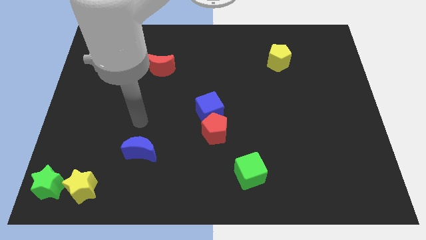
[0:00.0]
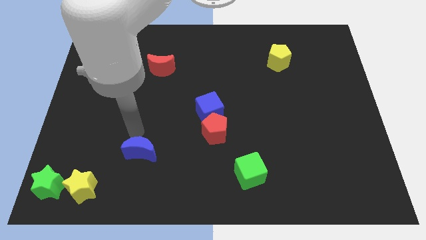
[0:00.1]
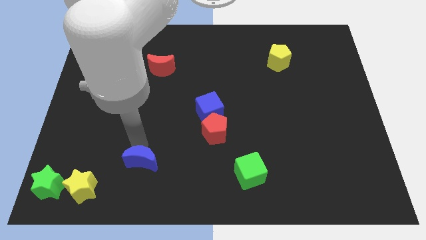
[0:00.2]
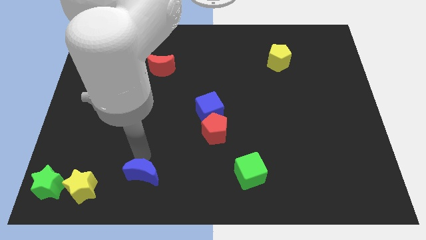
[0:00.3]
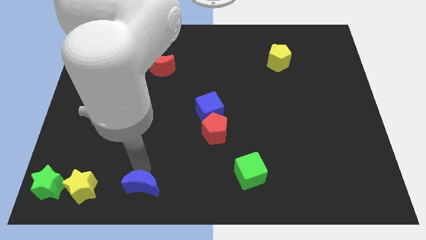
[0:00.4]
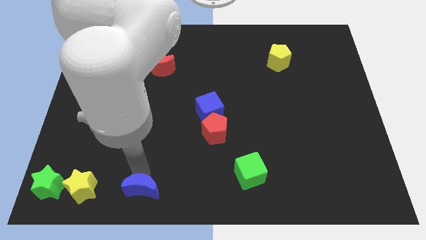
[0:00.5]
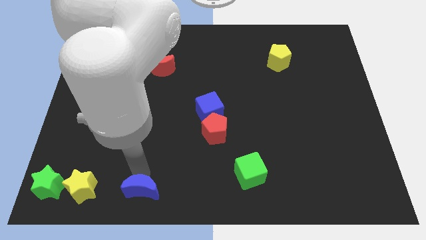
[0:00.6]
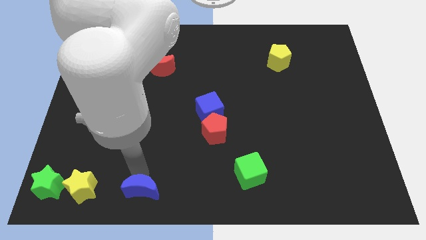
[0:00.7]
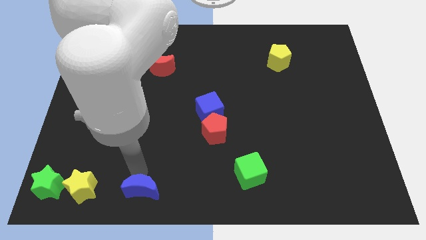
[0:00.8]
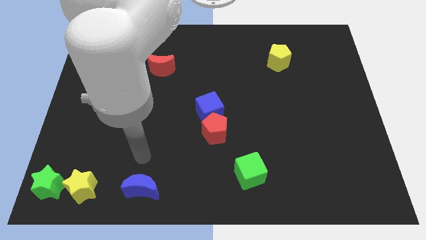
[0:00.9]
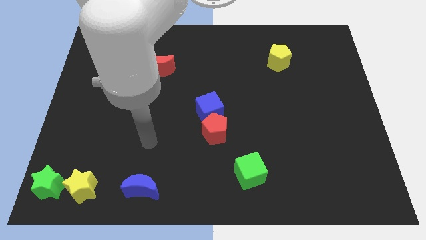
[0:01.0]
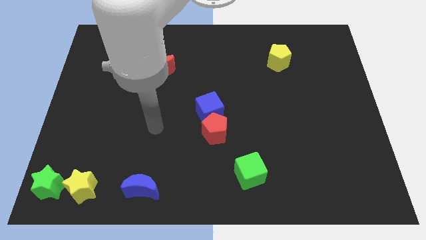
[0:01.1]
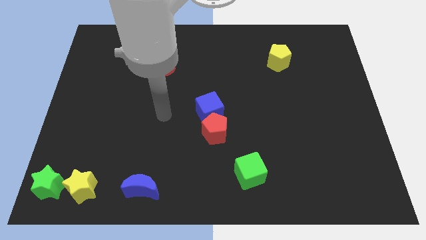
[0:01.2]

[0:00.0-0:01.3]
place the blue moon to the right of the yellow star

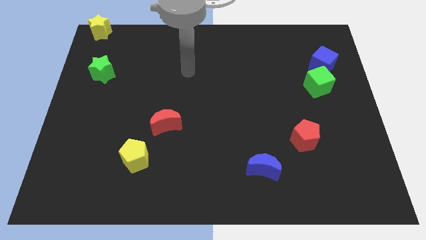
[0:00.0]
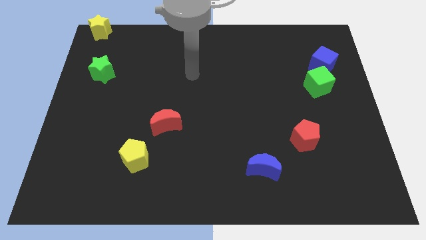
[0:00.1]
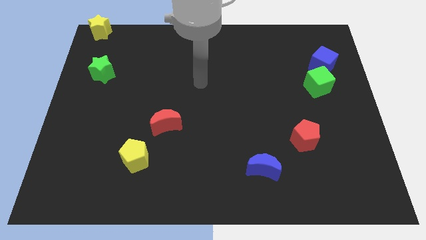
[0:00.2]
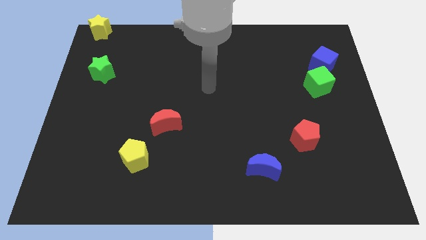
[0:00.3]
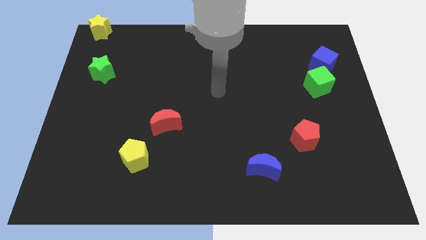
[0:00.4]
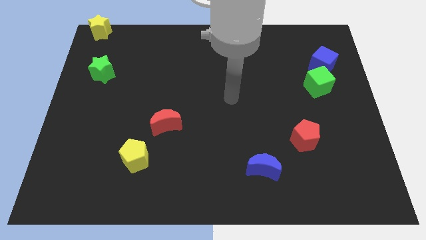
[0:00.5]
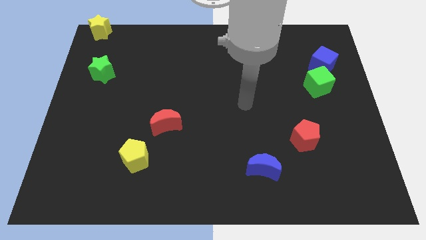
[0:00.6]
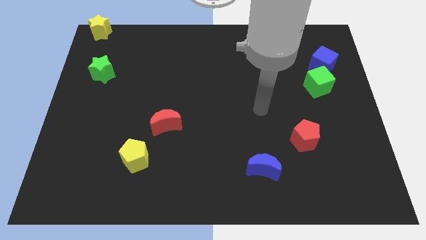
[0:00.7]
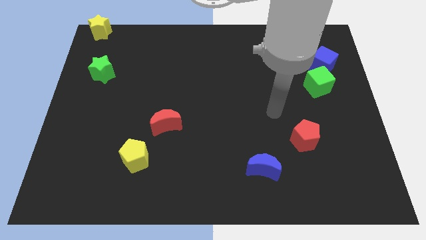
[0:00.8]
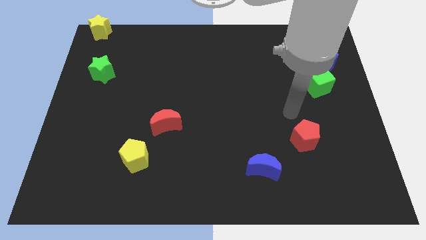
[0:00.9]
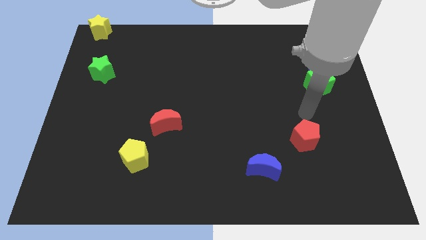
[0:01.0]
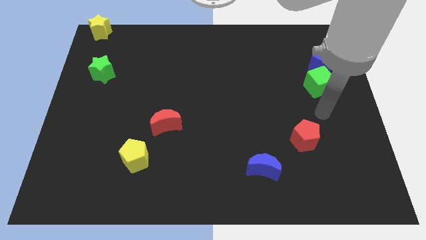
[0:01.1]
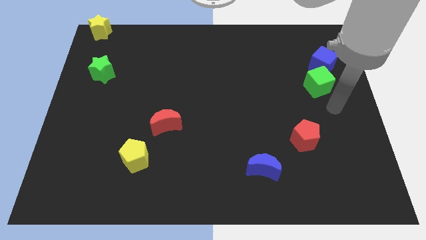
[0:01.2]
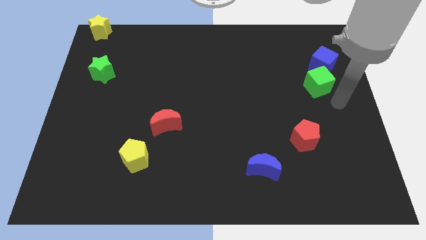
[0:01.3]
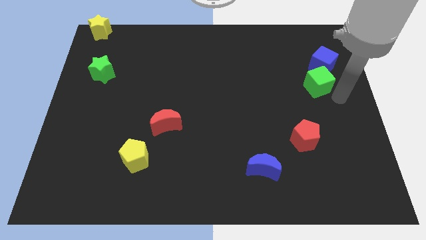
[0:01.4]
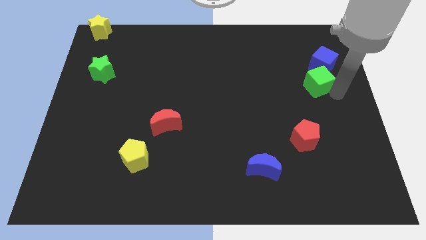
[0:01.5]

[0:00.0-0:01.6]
point your arm towards the right side of the green cube

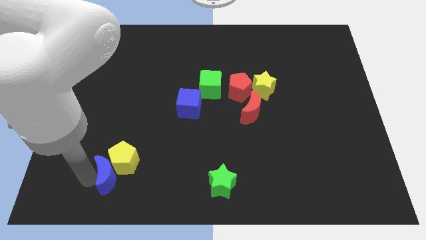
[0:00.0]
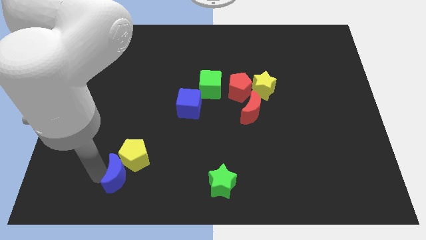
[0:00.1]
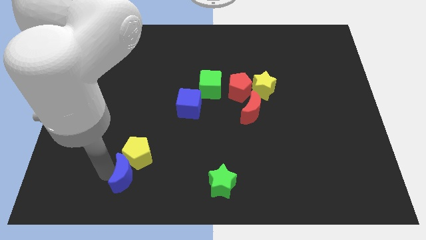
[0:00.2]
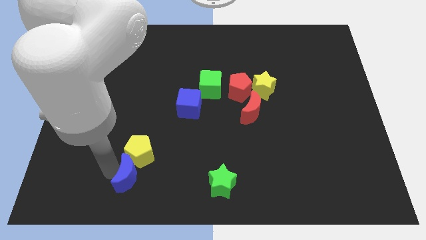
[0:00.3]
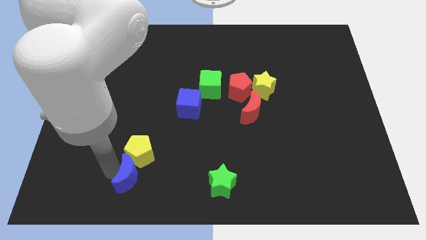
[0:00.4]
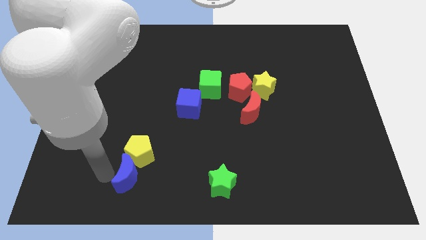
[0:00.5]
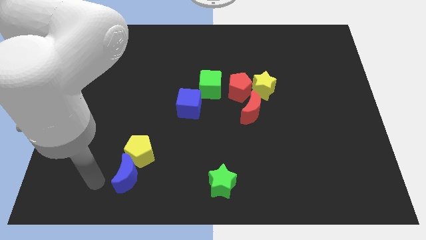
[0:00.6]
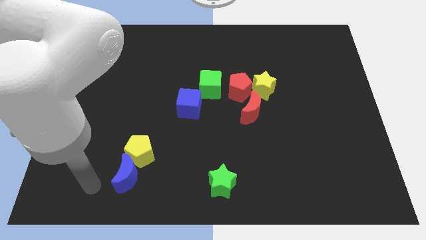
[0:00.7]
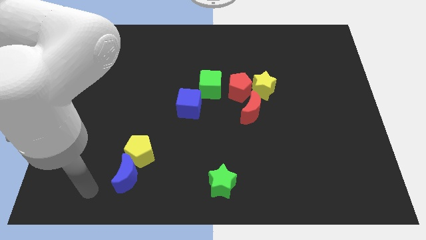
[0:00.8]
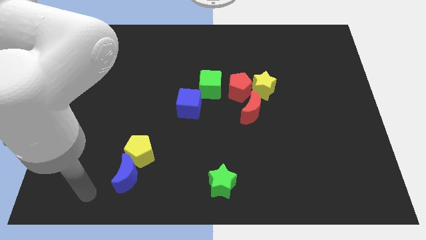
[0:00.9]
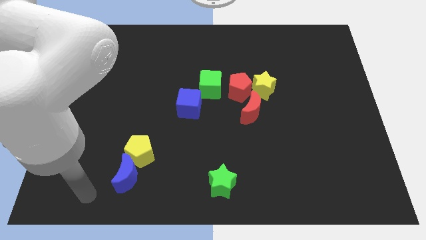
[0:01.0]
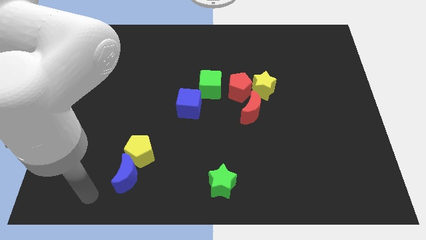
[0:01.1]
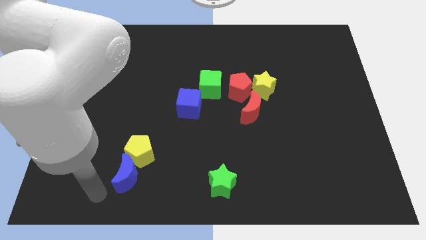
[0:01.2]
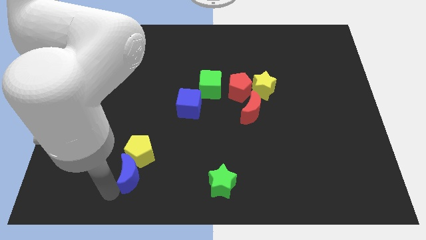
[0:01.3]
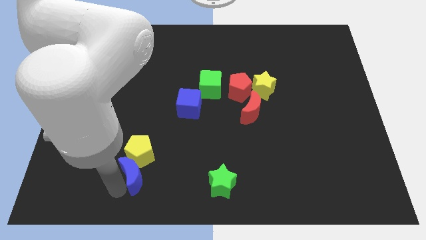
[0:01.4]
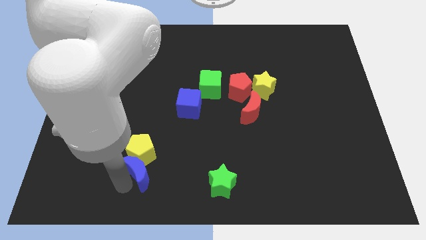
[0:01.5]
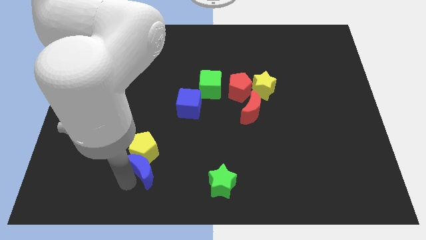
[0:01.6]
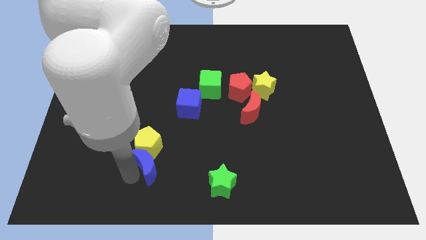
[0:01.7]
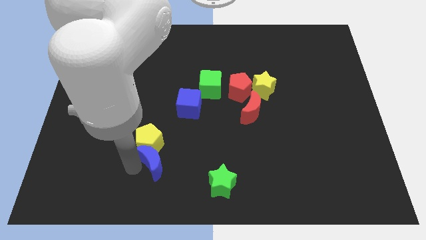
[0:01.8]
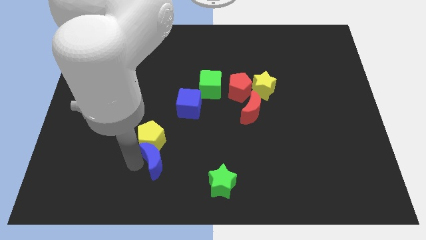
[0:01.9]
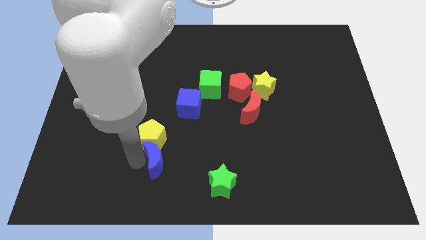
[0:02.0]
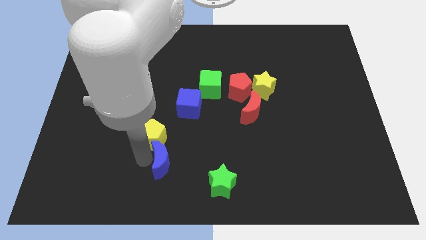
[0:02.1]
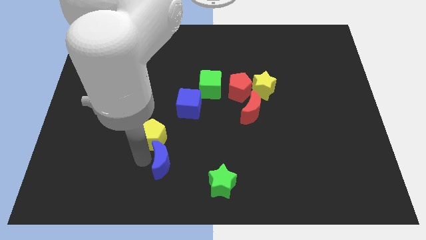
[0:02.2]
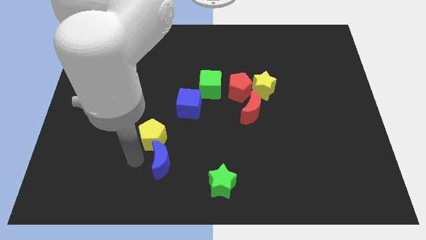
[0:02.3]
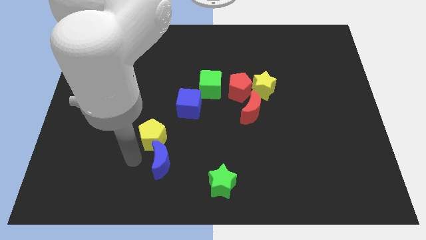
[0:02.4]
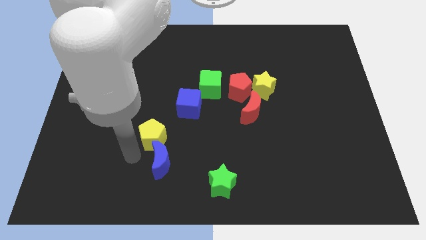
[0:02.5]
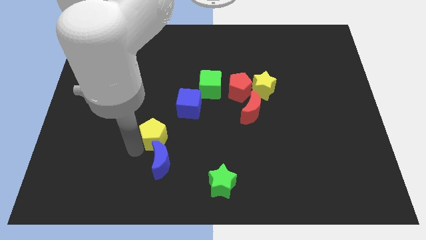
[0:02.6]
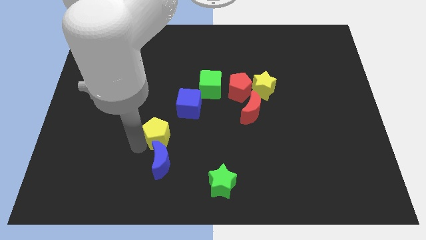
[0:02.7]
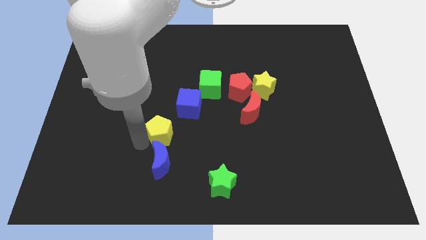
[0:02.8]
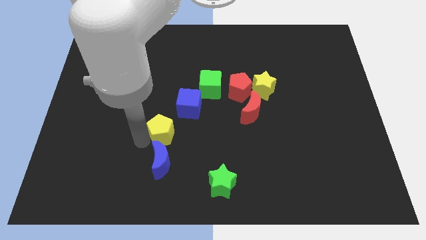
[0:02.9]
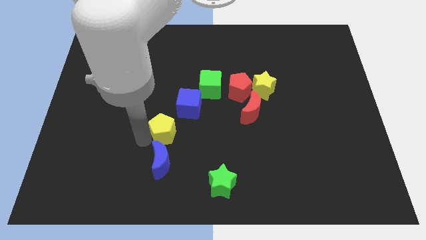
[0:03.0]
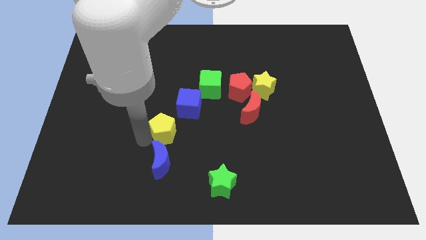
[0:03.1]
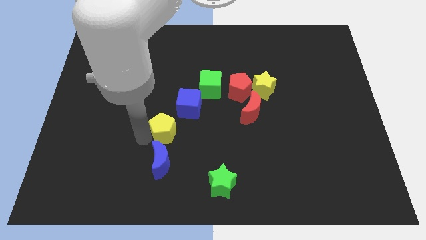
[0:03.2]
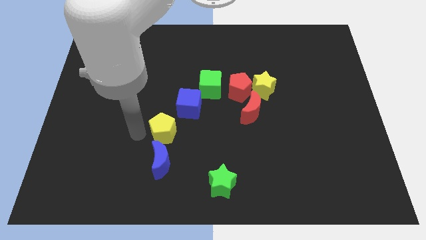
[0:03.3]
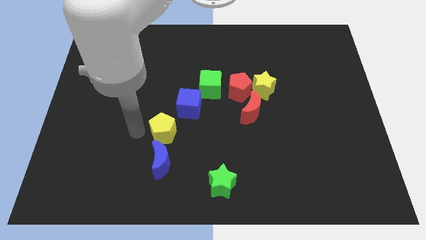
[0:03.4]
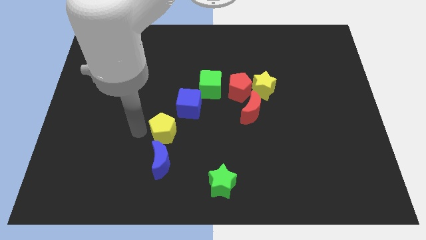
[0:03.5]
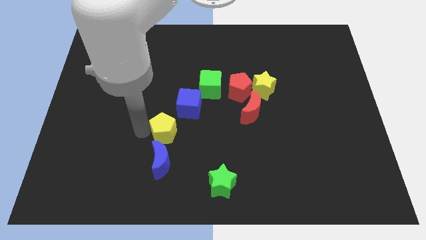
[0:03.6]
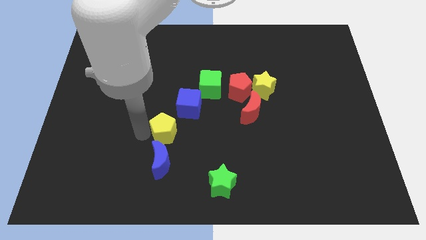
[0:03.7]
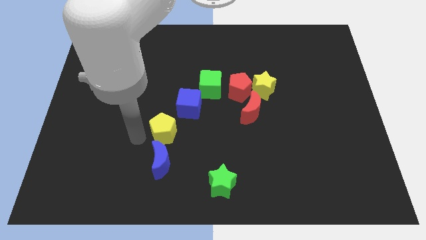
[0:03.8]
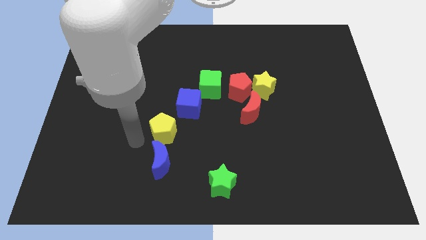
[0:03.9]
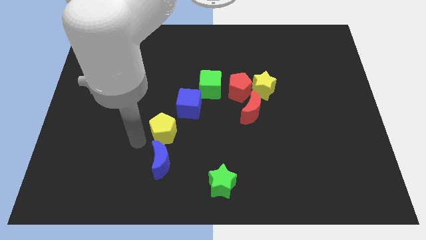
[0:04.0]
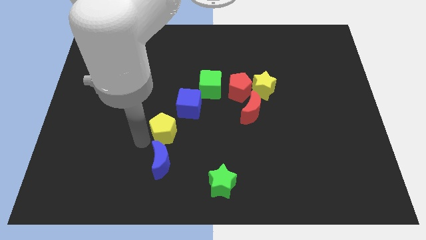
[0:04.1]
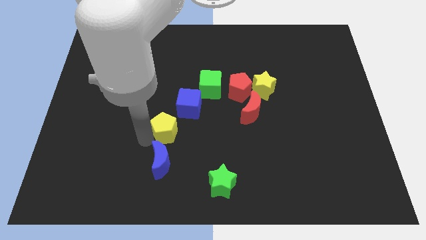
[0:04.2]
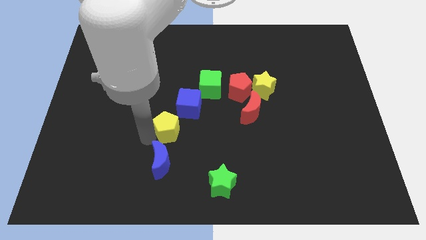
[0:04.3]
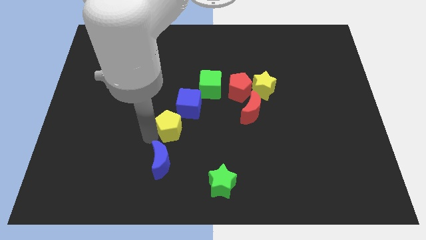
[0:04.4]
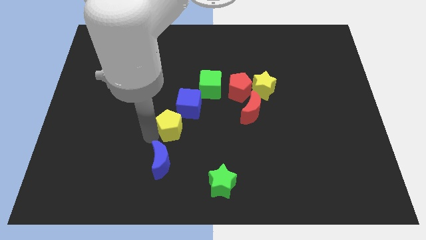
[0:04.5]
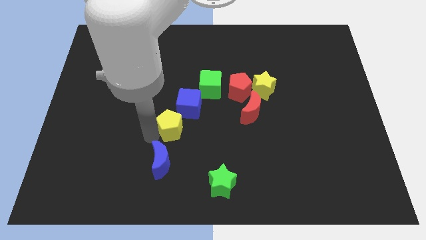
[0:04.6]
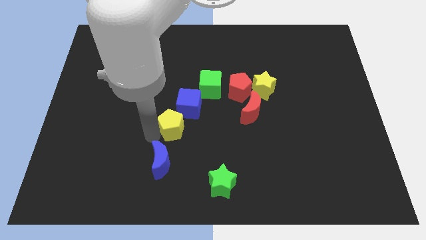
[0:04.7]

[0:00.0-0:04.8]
place the yellow pentagon in between the blue blocks

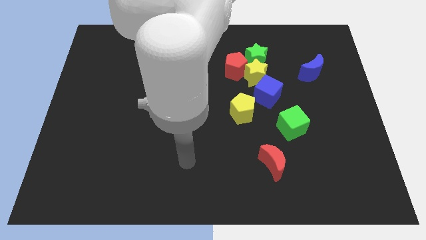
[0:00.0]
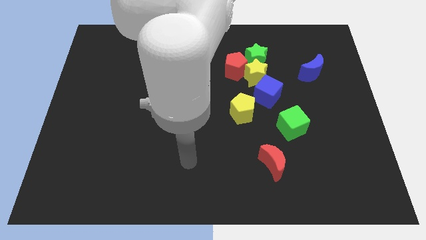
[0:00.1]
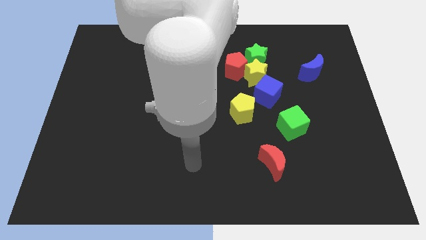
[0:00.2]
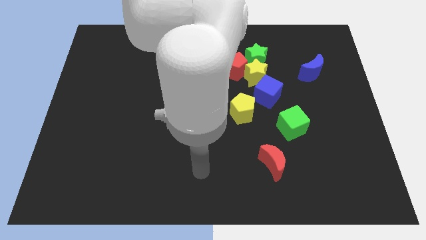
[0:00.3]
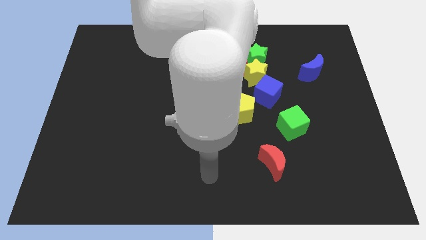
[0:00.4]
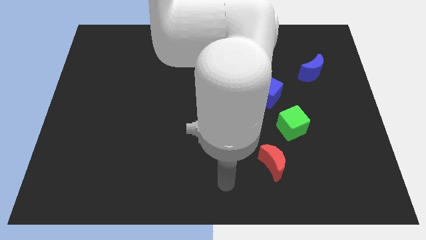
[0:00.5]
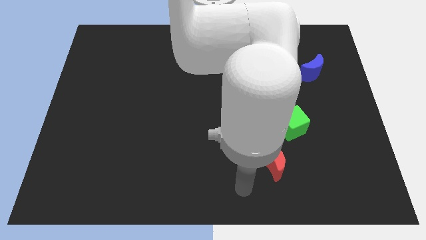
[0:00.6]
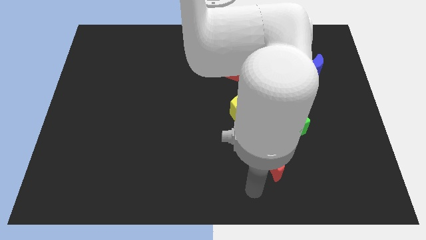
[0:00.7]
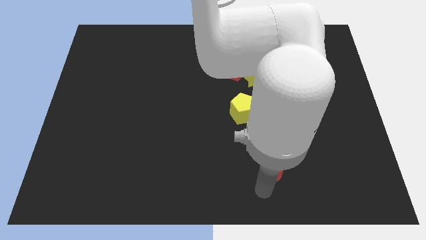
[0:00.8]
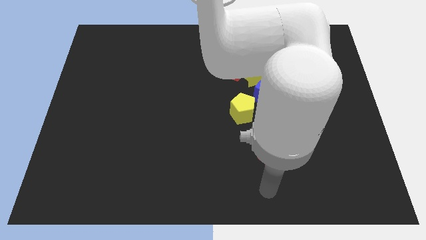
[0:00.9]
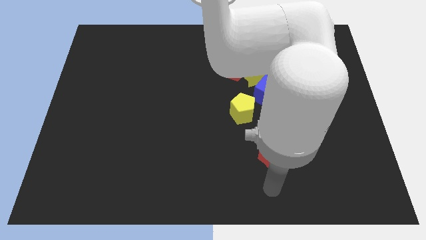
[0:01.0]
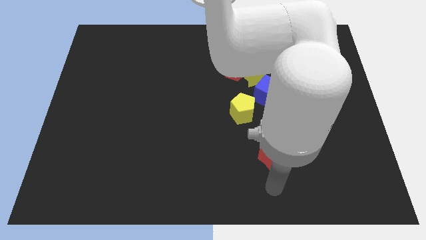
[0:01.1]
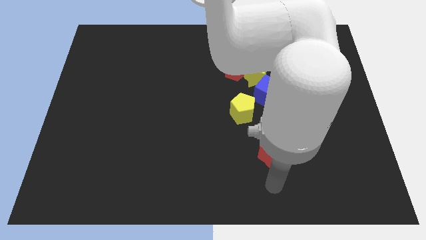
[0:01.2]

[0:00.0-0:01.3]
move your arm towards the red crescent
